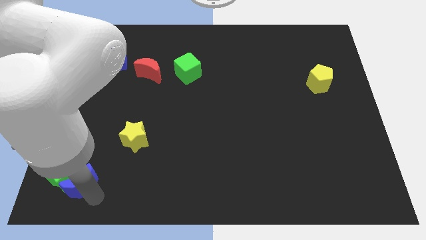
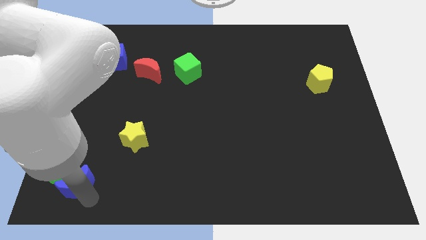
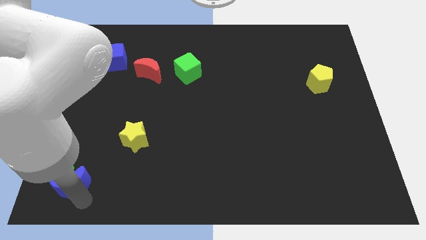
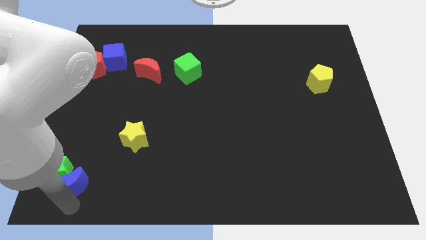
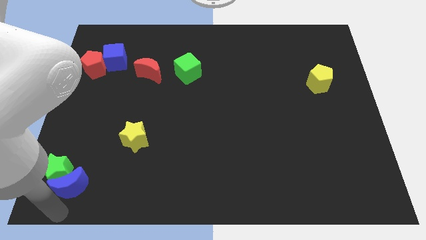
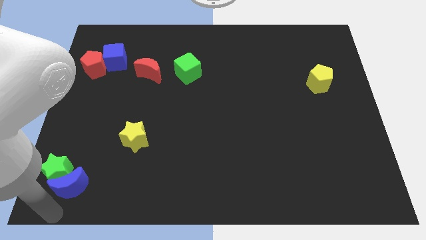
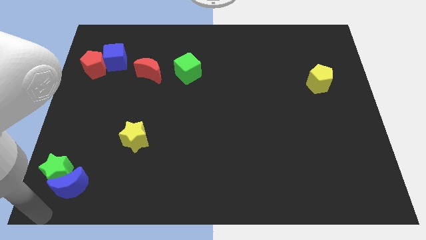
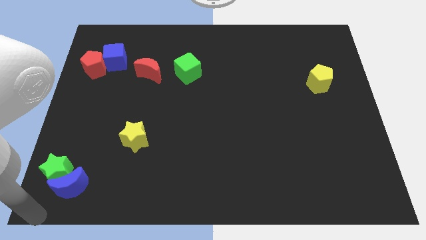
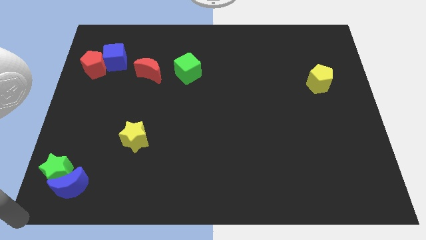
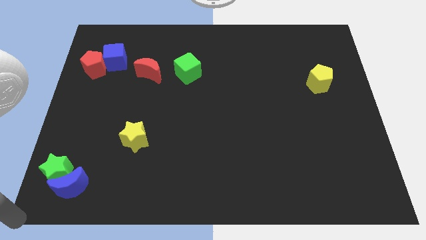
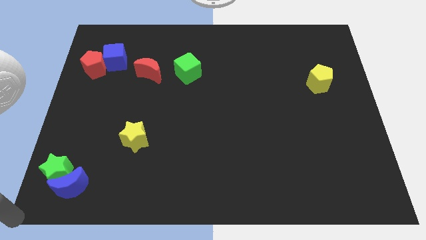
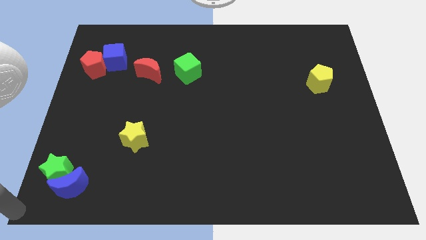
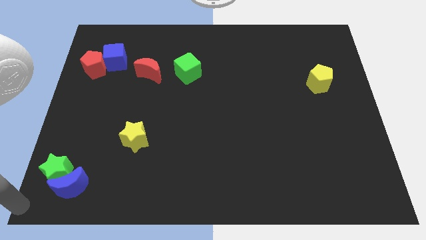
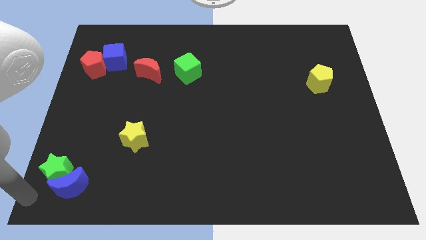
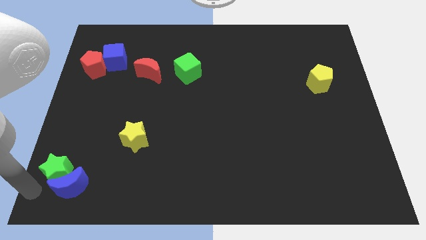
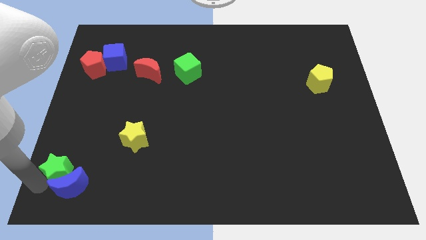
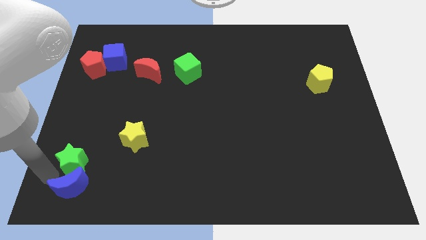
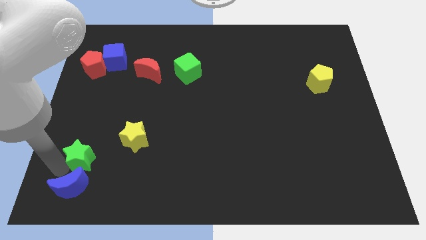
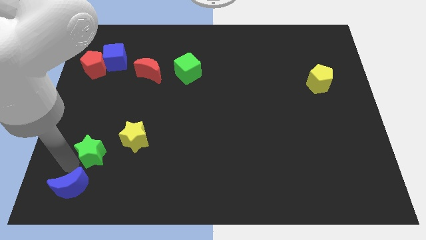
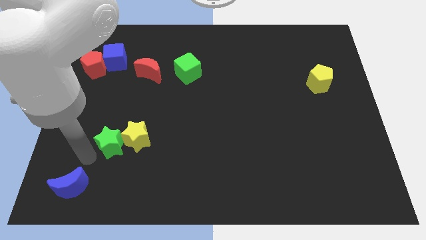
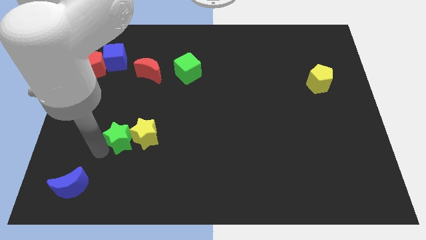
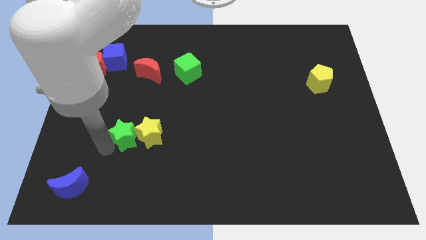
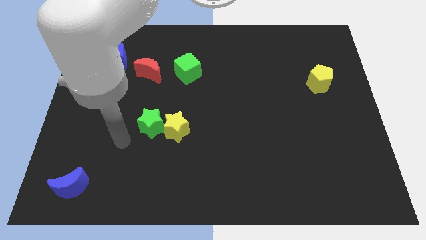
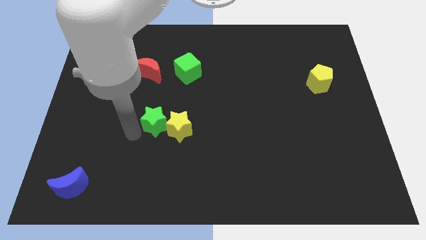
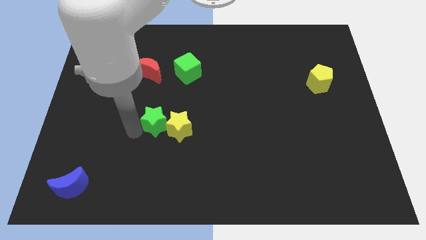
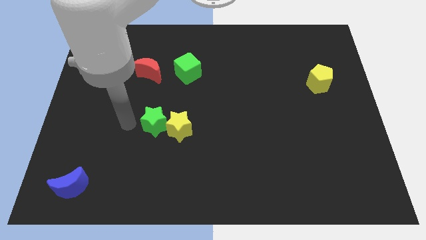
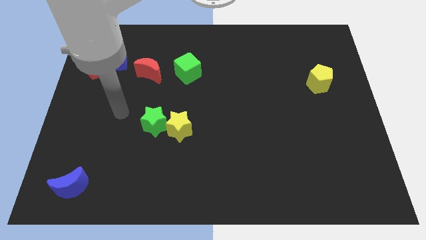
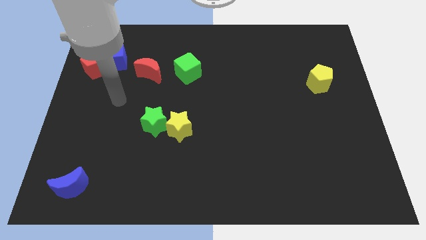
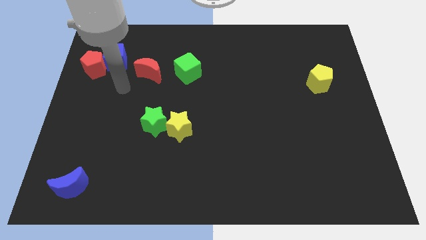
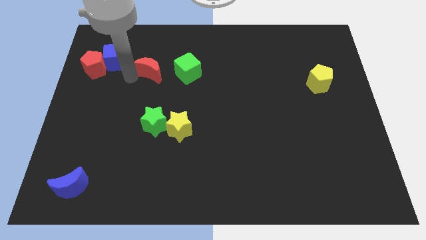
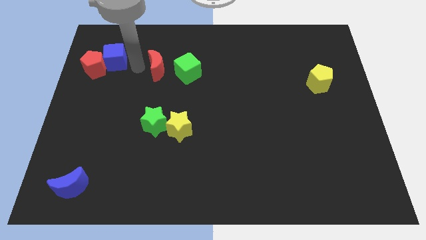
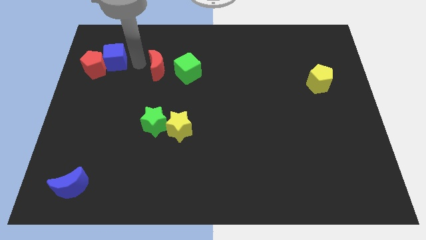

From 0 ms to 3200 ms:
push the green star towards the yellow star

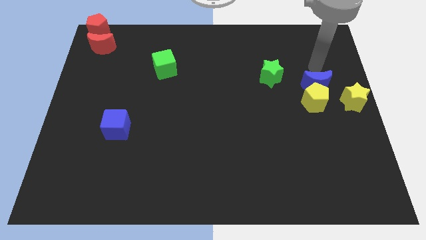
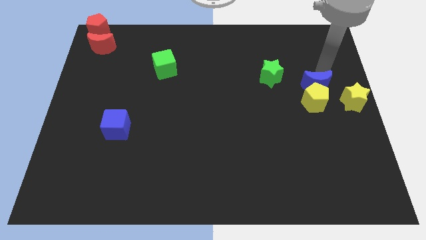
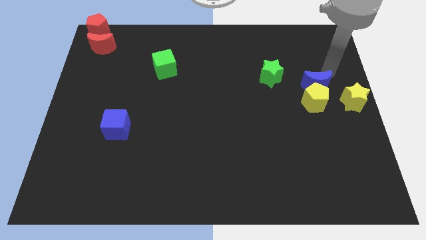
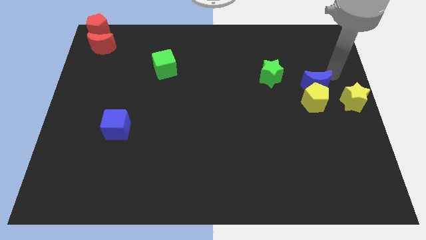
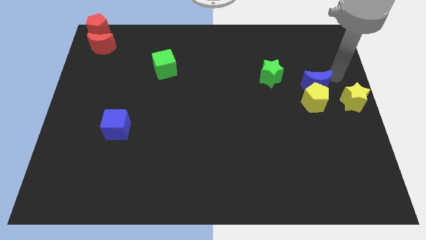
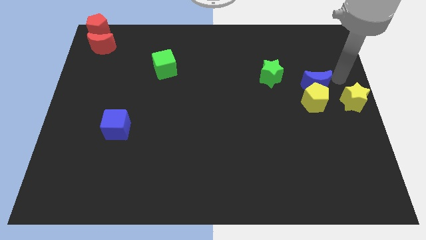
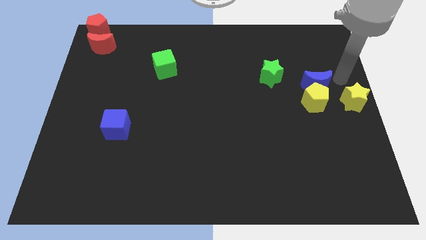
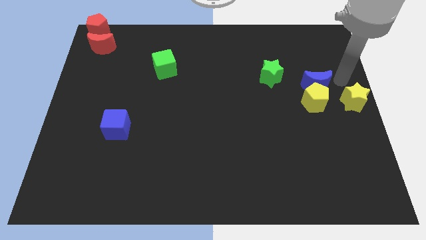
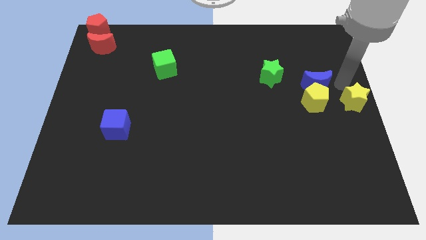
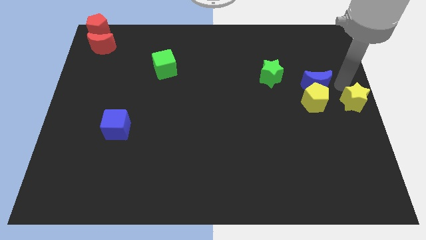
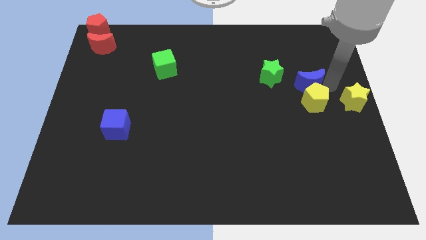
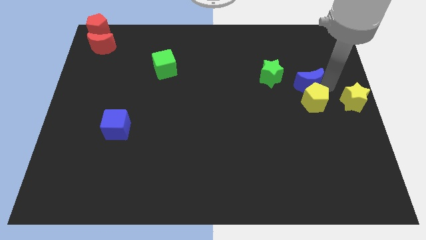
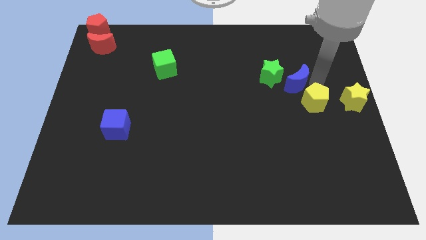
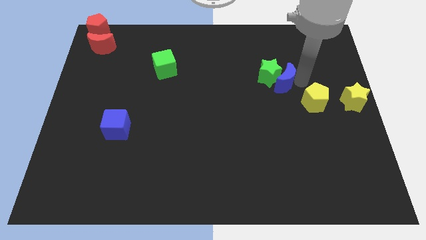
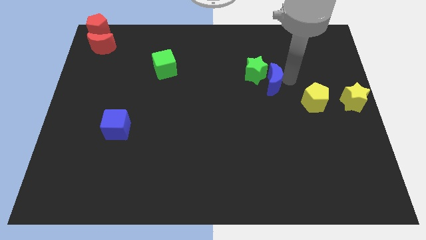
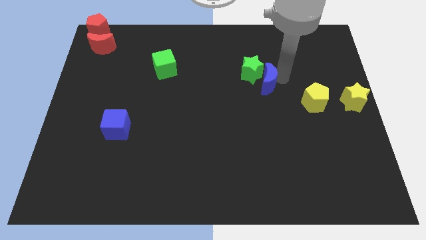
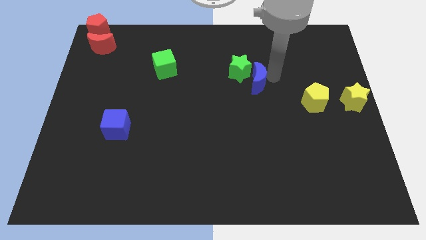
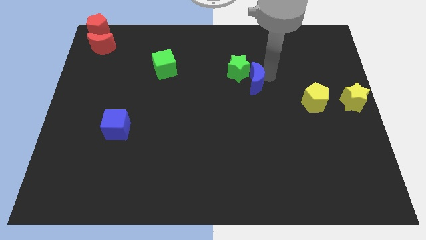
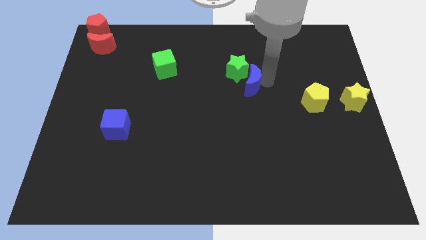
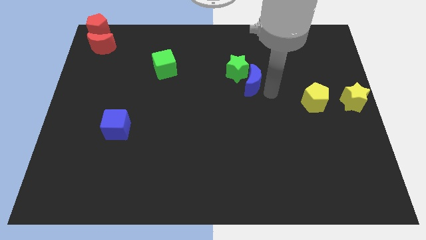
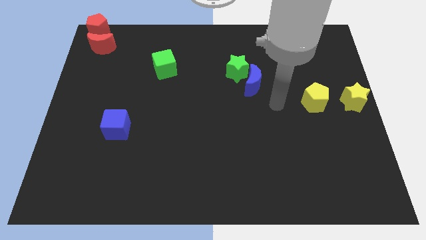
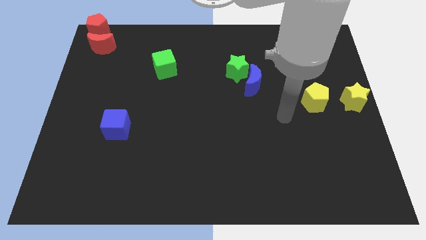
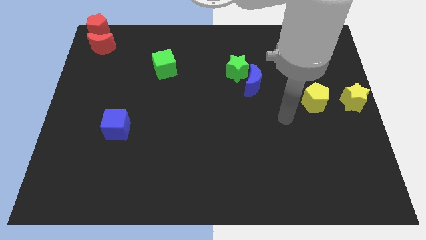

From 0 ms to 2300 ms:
push the blue moon into the green star

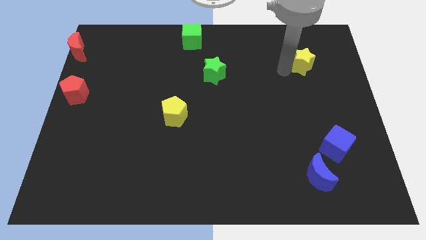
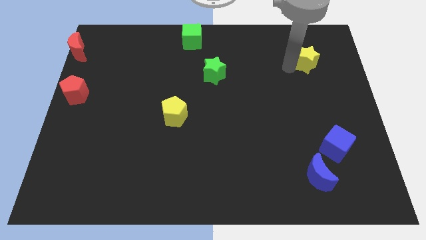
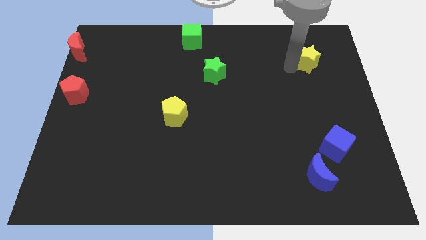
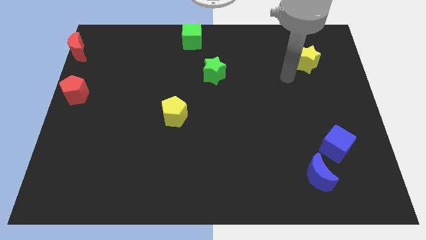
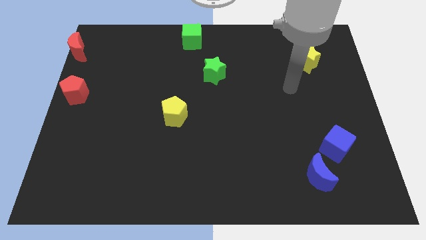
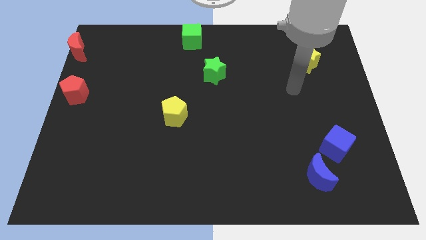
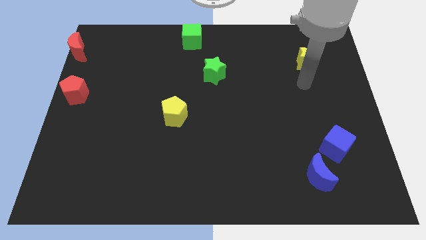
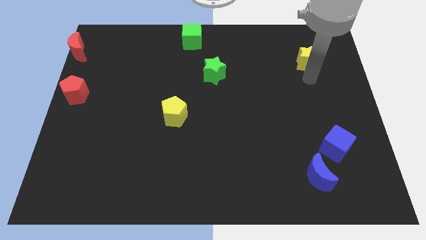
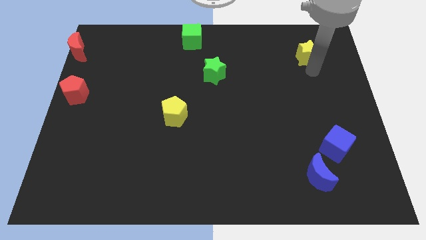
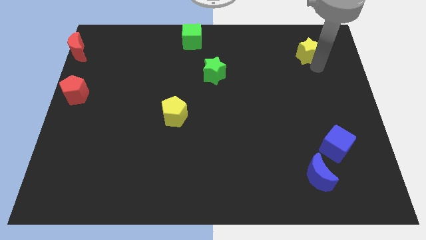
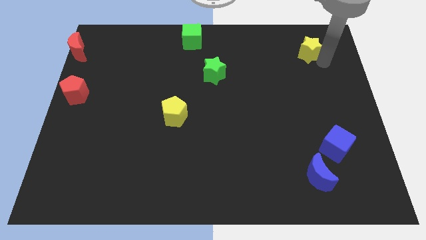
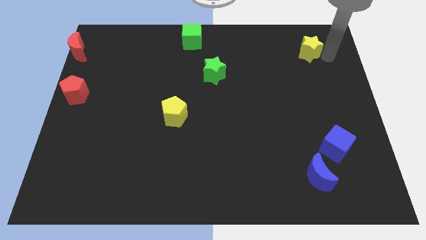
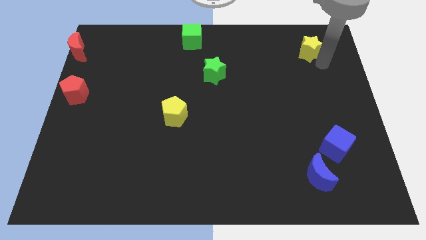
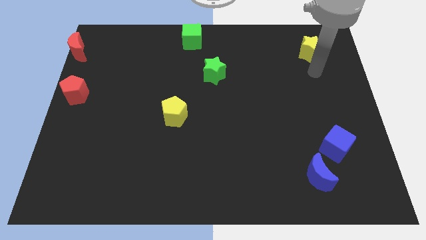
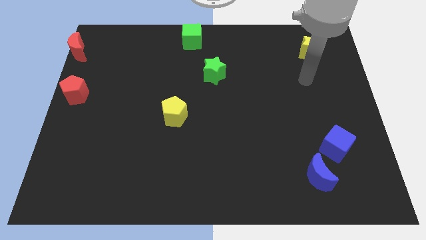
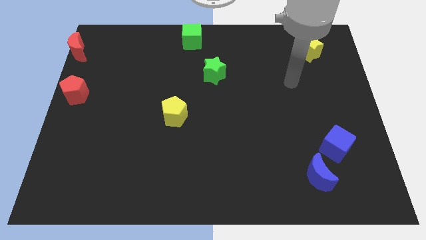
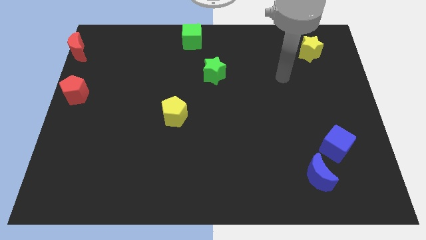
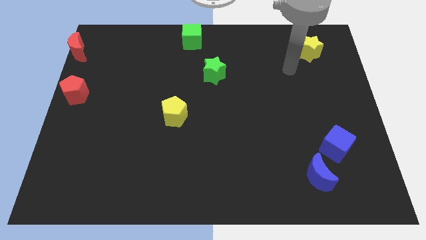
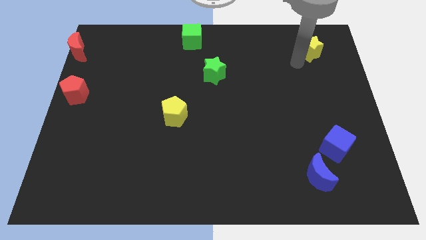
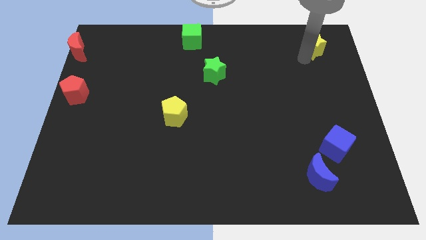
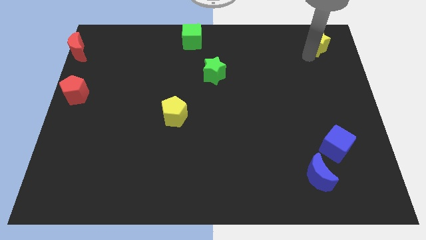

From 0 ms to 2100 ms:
push the yellow star towards the top right corner of the board

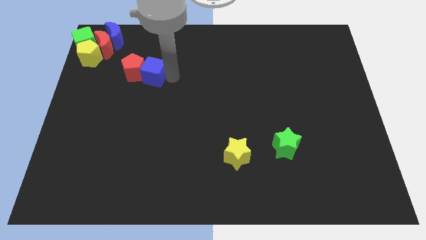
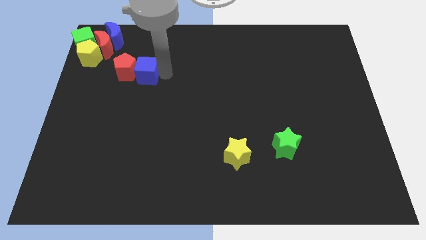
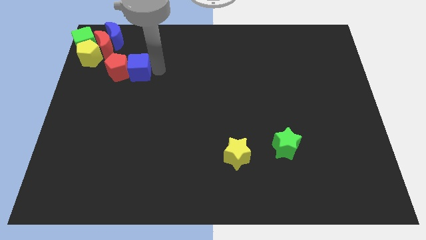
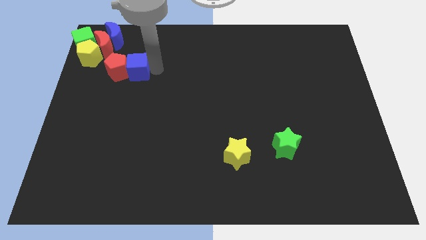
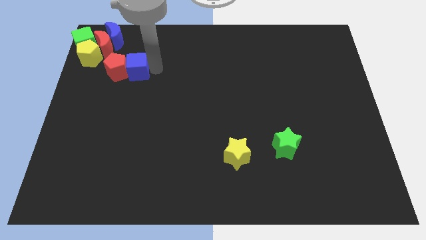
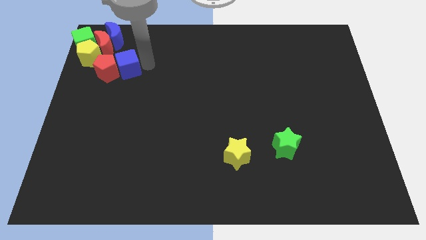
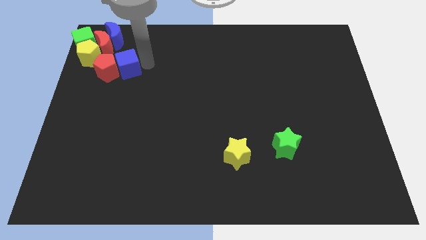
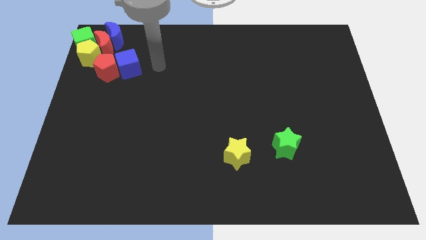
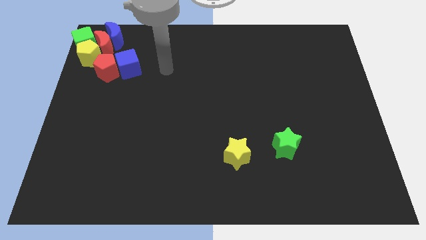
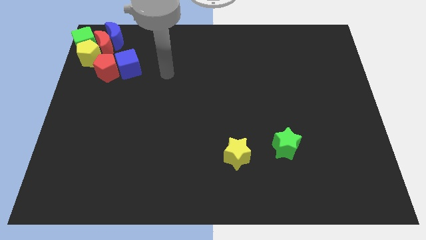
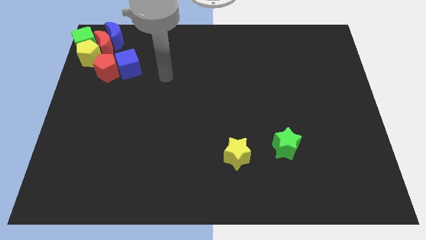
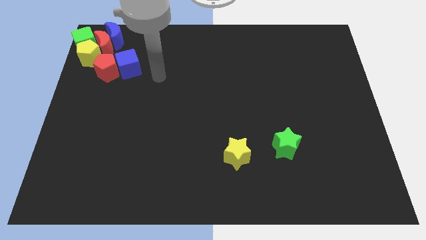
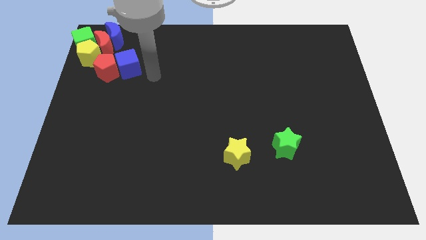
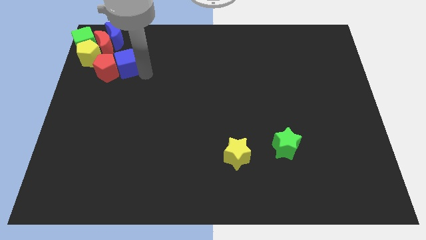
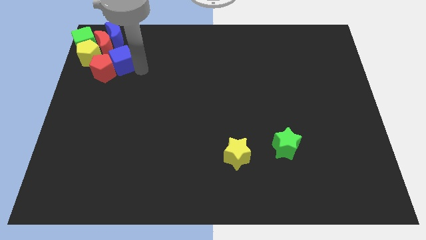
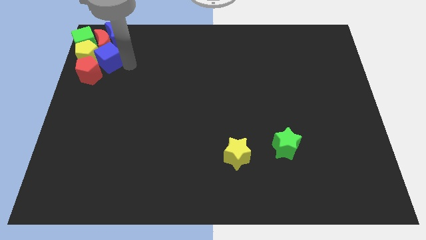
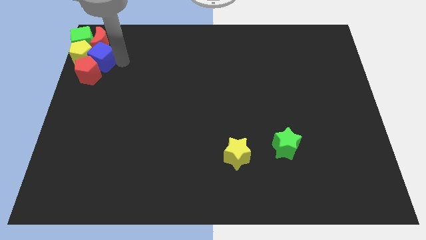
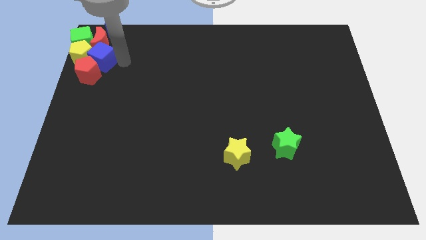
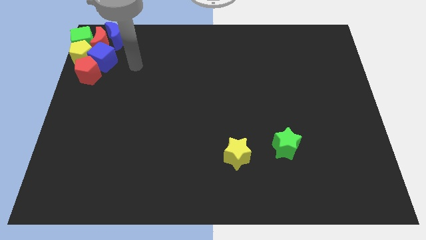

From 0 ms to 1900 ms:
push the blue cube and red pentagon into the group of blocks
